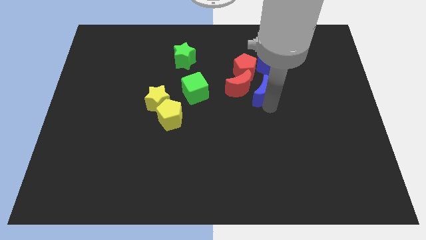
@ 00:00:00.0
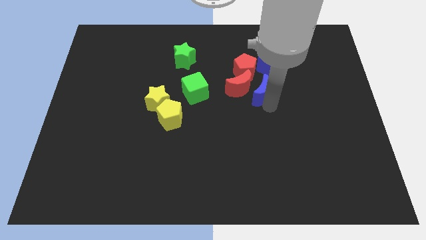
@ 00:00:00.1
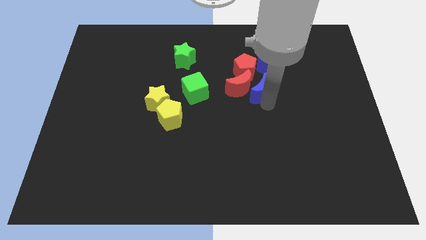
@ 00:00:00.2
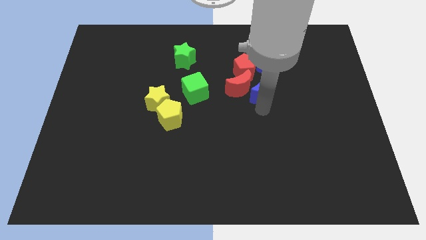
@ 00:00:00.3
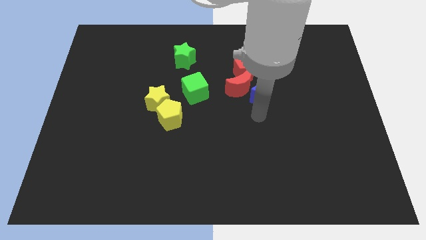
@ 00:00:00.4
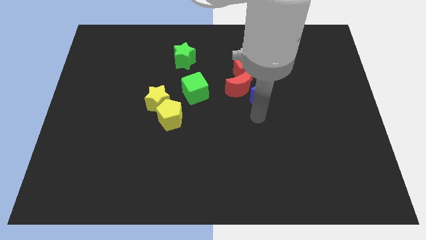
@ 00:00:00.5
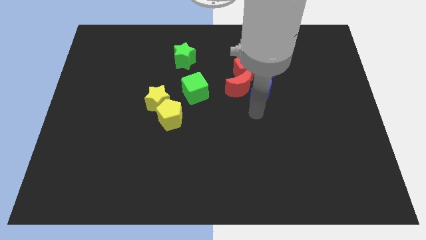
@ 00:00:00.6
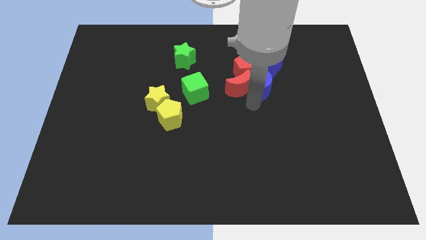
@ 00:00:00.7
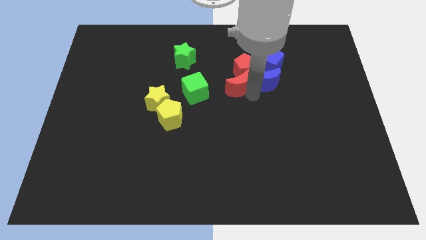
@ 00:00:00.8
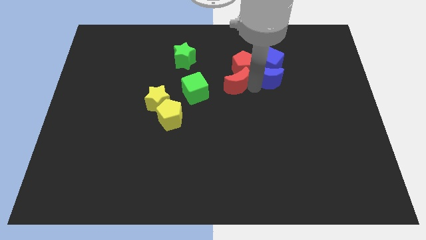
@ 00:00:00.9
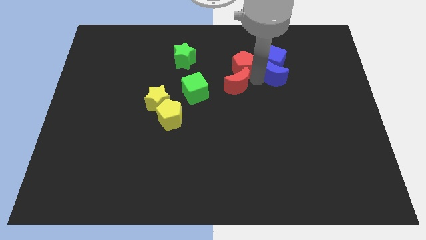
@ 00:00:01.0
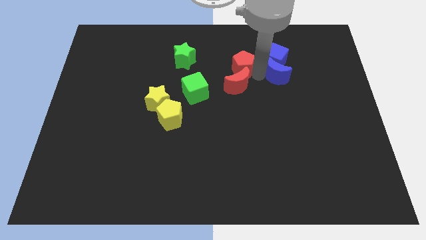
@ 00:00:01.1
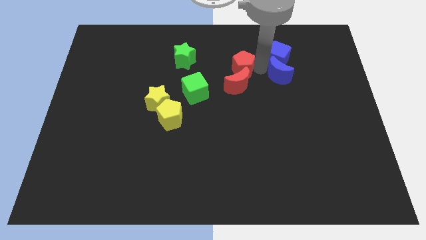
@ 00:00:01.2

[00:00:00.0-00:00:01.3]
push the blue crescent into the blue cube

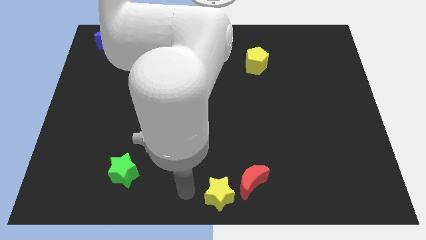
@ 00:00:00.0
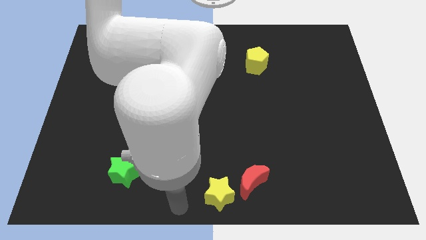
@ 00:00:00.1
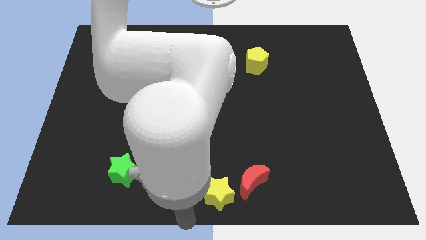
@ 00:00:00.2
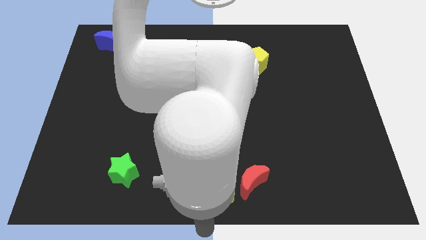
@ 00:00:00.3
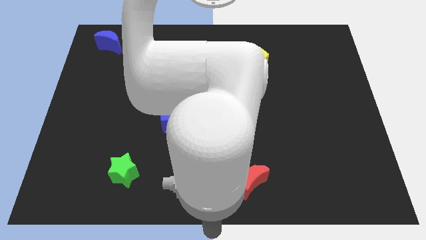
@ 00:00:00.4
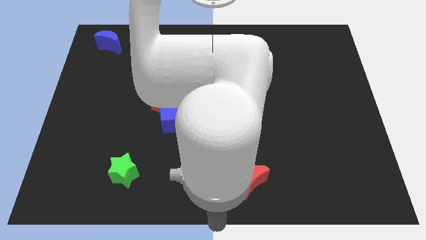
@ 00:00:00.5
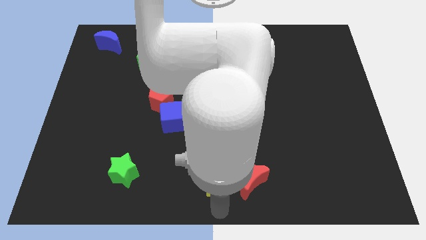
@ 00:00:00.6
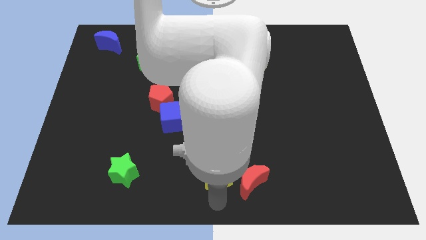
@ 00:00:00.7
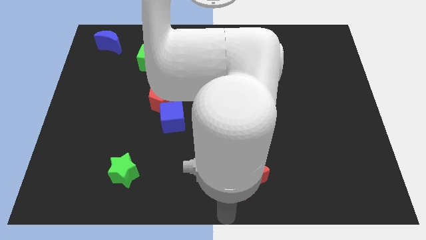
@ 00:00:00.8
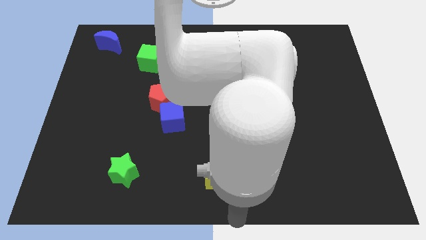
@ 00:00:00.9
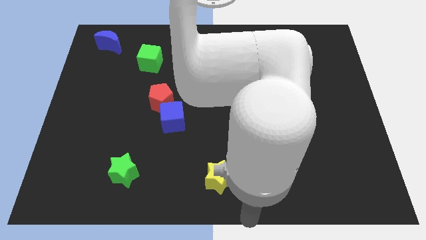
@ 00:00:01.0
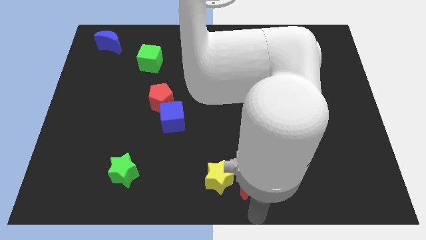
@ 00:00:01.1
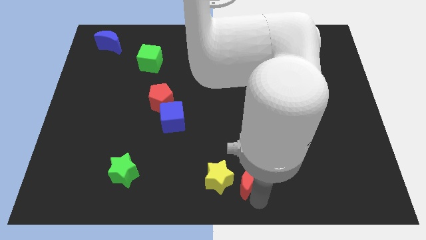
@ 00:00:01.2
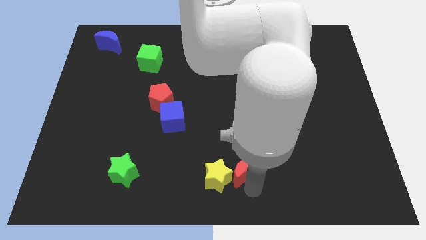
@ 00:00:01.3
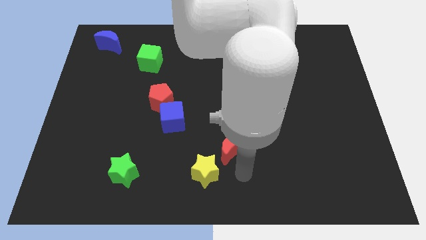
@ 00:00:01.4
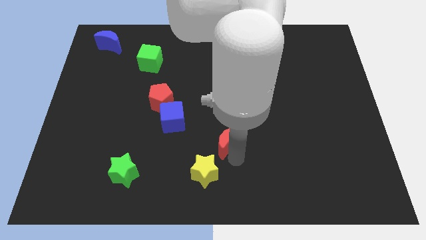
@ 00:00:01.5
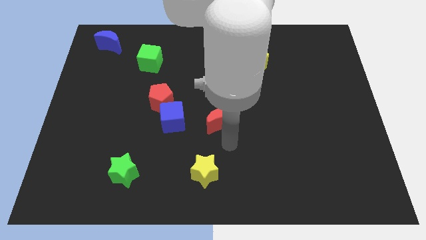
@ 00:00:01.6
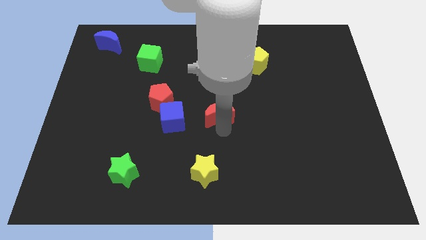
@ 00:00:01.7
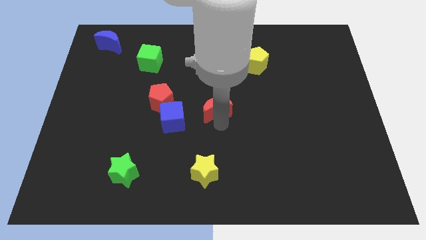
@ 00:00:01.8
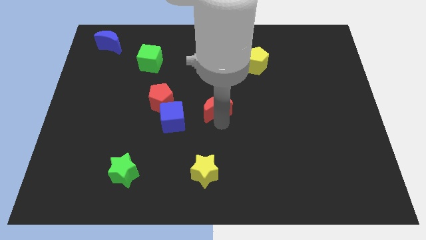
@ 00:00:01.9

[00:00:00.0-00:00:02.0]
move the red moon right to the blue cube

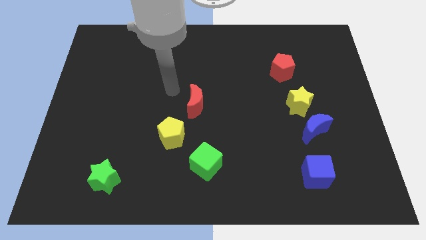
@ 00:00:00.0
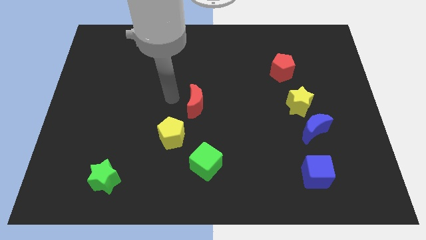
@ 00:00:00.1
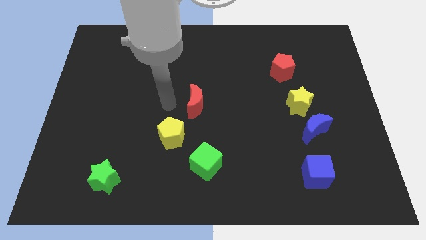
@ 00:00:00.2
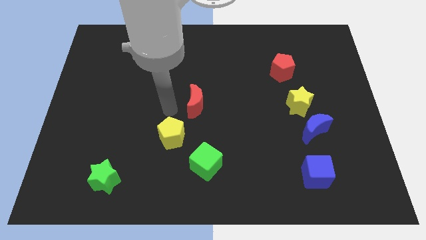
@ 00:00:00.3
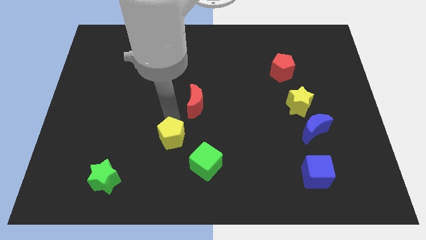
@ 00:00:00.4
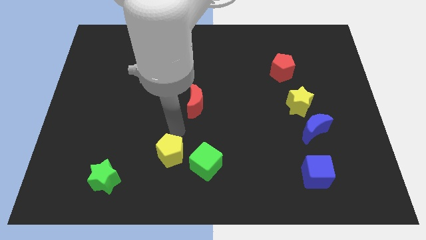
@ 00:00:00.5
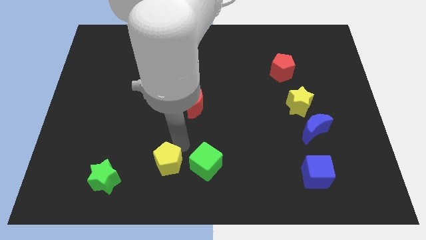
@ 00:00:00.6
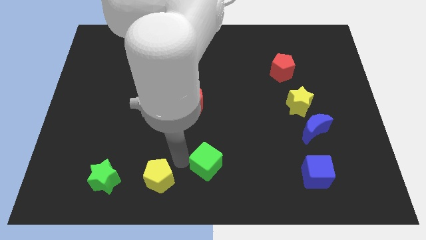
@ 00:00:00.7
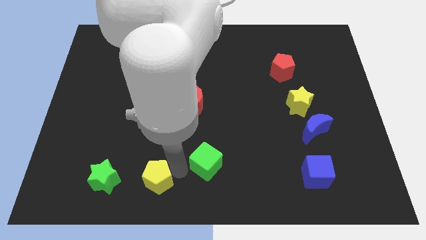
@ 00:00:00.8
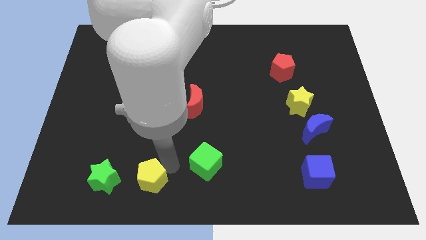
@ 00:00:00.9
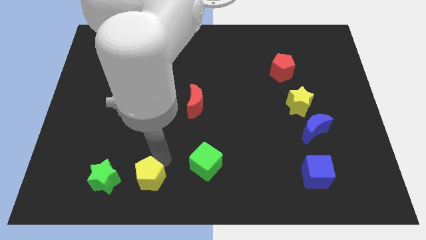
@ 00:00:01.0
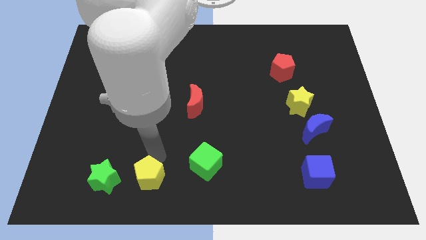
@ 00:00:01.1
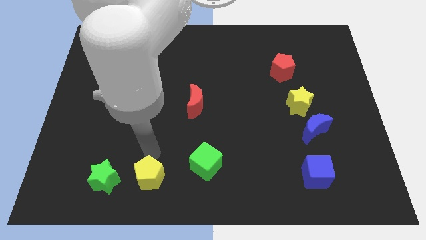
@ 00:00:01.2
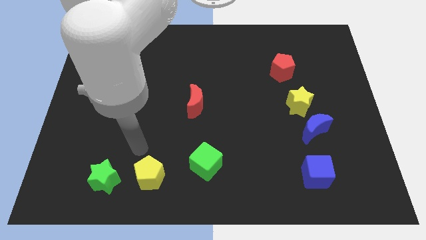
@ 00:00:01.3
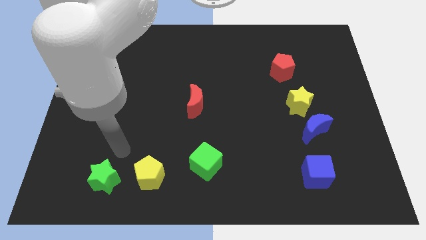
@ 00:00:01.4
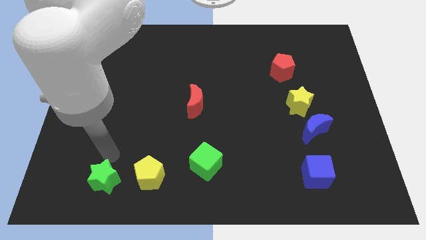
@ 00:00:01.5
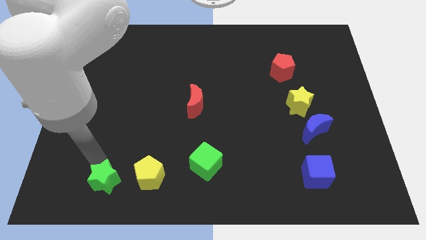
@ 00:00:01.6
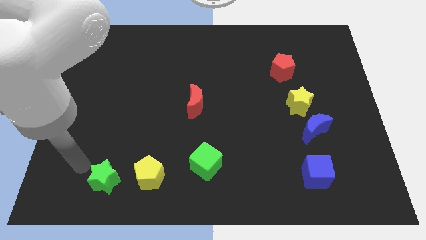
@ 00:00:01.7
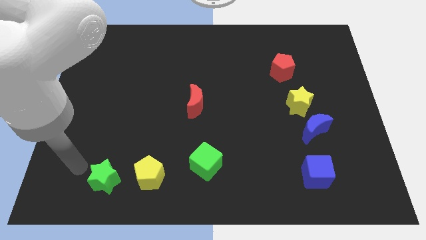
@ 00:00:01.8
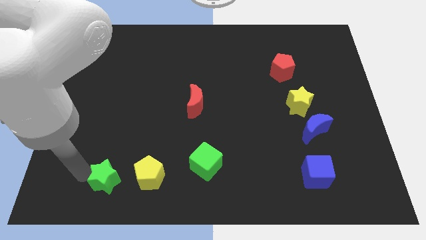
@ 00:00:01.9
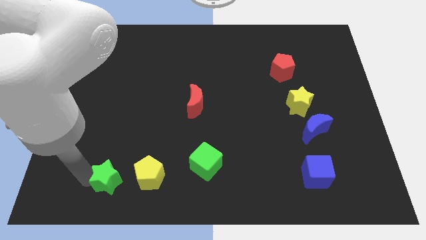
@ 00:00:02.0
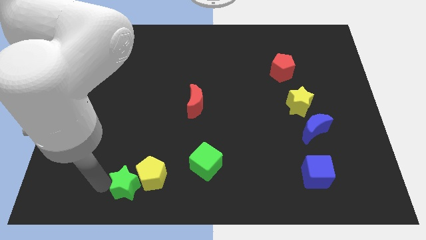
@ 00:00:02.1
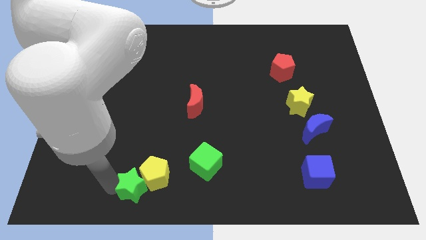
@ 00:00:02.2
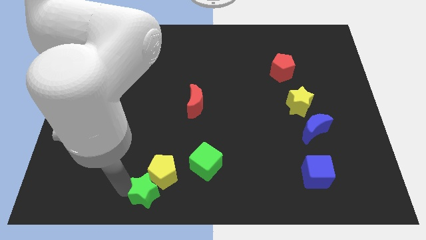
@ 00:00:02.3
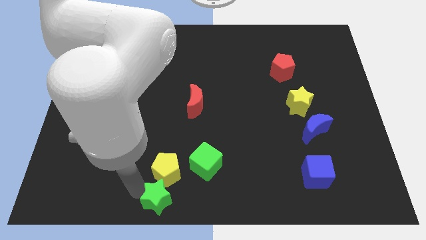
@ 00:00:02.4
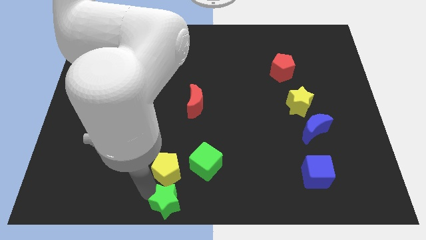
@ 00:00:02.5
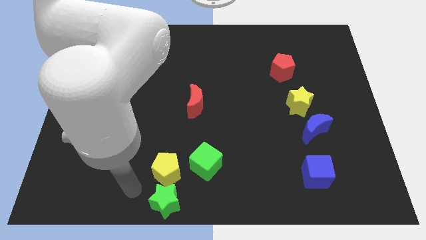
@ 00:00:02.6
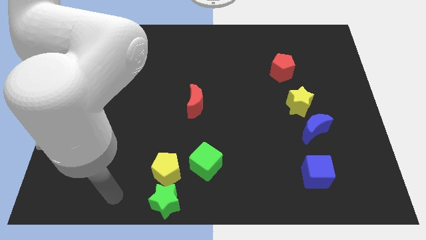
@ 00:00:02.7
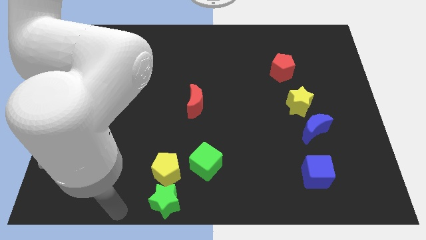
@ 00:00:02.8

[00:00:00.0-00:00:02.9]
move the green star below the yellow pentagon

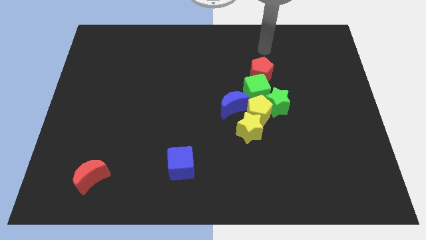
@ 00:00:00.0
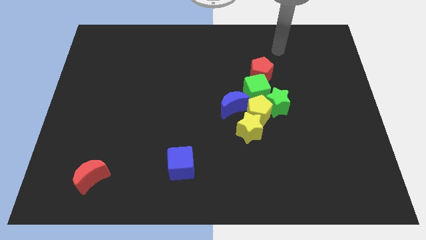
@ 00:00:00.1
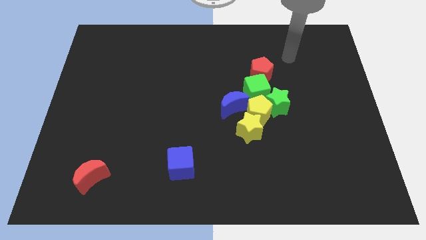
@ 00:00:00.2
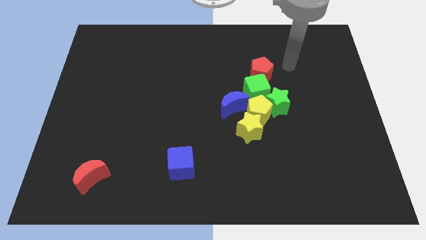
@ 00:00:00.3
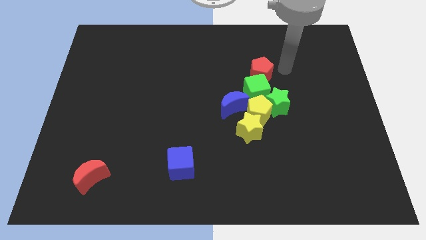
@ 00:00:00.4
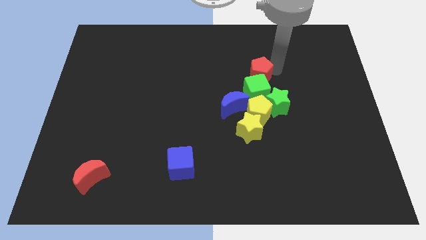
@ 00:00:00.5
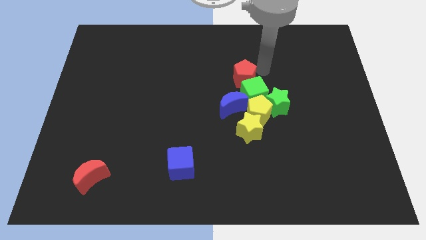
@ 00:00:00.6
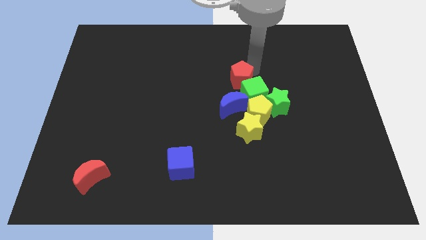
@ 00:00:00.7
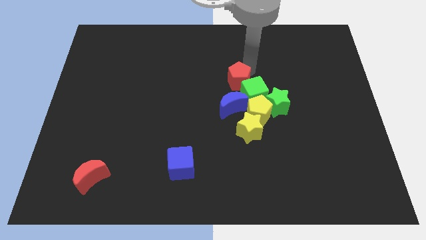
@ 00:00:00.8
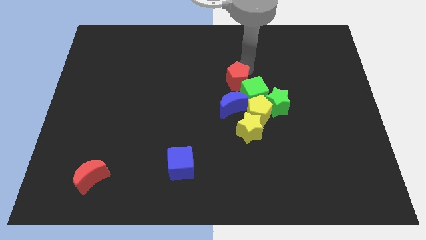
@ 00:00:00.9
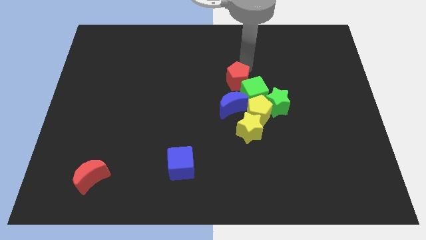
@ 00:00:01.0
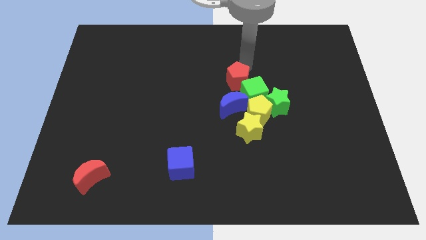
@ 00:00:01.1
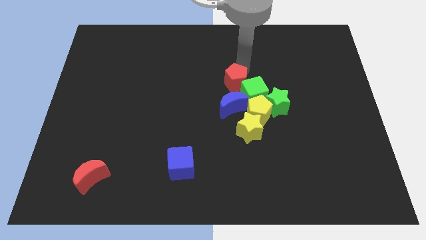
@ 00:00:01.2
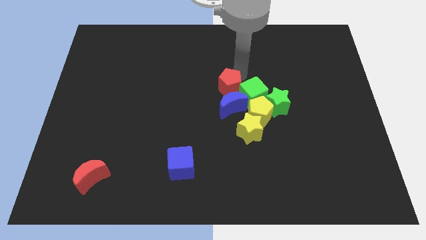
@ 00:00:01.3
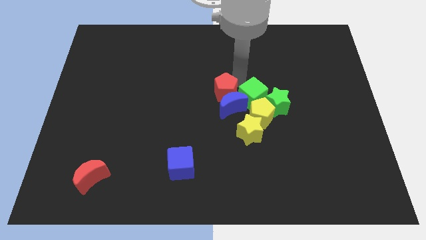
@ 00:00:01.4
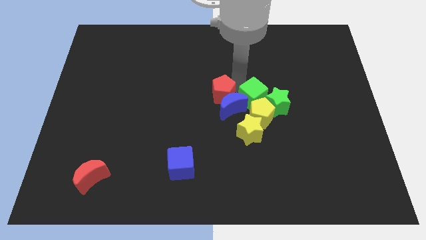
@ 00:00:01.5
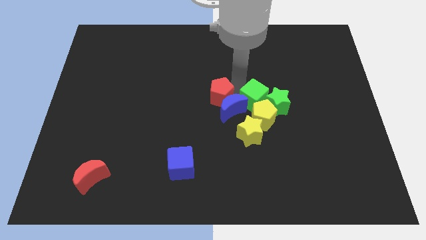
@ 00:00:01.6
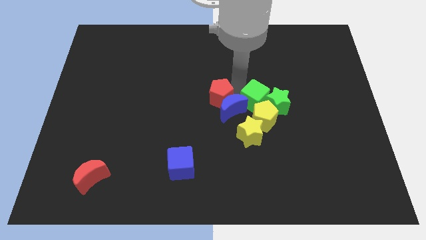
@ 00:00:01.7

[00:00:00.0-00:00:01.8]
move the red pentagon into the top left side of the blue moon

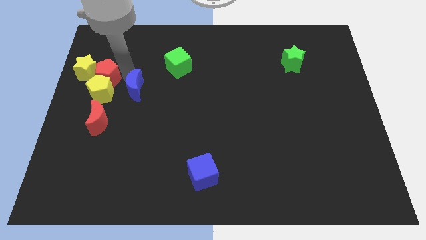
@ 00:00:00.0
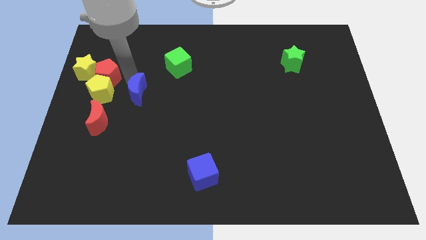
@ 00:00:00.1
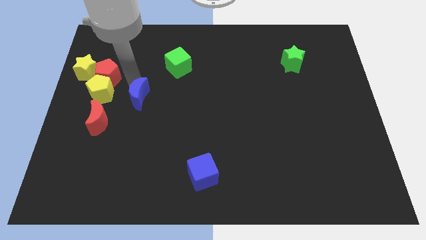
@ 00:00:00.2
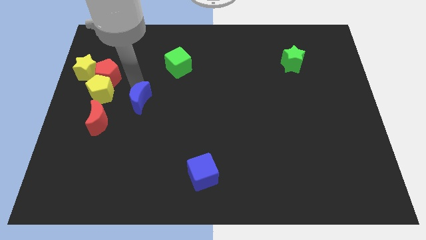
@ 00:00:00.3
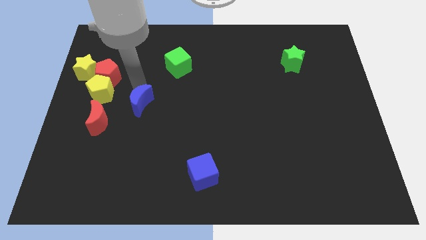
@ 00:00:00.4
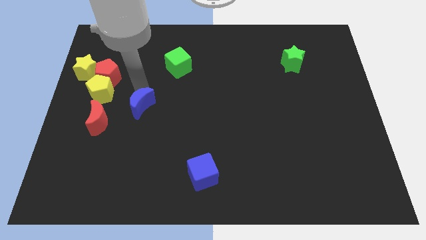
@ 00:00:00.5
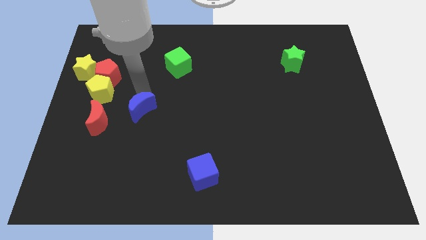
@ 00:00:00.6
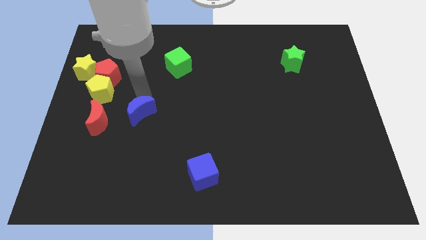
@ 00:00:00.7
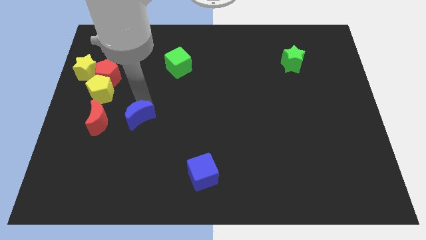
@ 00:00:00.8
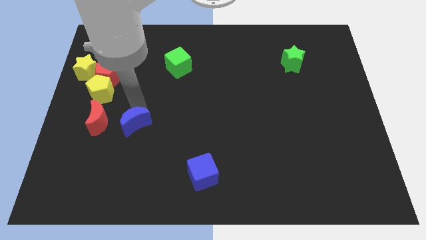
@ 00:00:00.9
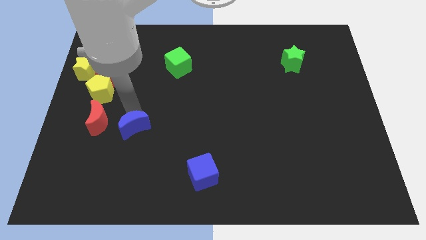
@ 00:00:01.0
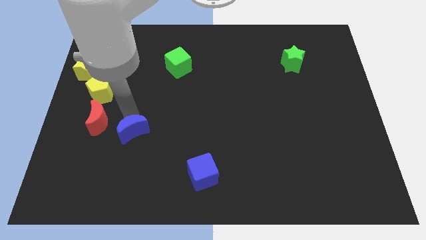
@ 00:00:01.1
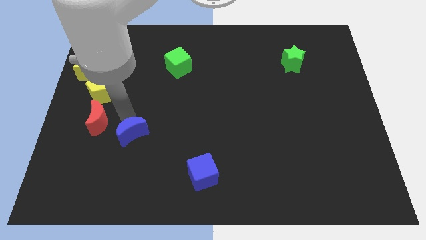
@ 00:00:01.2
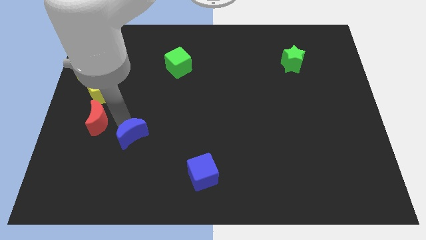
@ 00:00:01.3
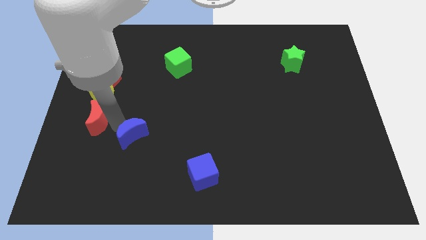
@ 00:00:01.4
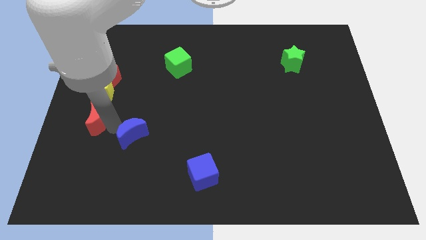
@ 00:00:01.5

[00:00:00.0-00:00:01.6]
put the blue moon to the down right side of the red crescent
